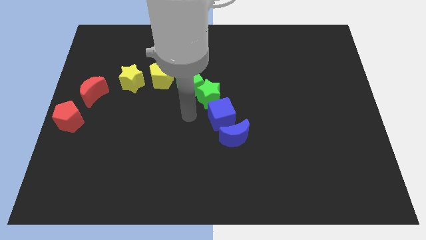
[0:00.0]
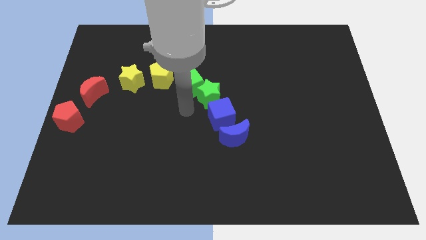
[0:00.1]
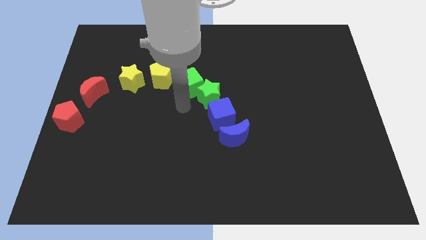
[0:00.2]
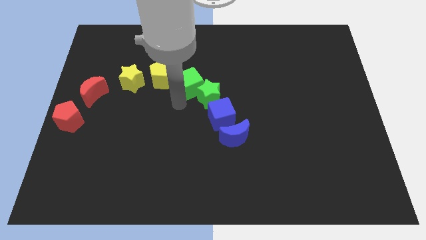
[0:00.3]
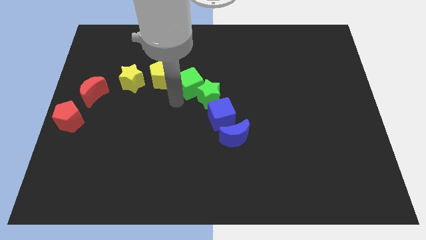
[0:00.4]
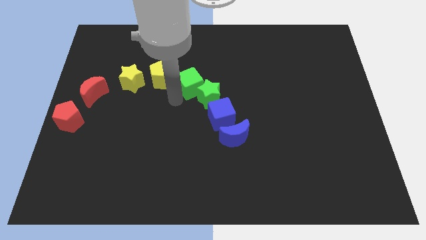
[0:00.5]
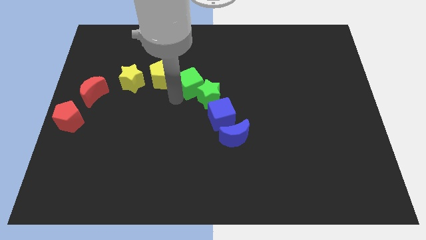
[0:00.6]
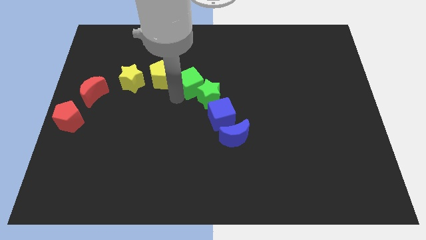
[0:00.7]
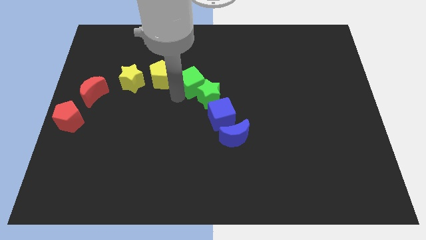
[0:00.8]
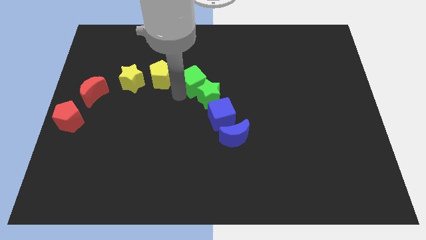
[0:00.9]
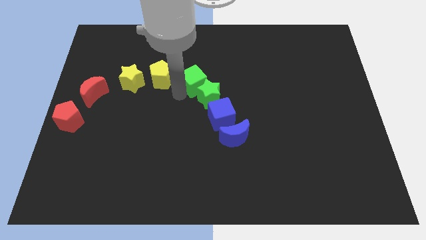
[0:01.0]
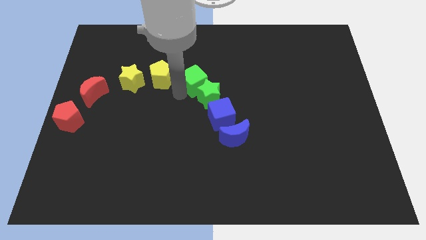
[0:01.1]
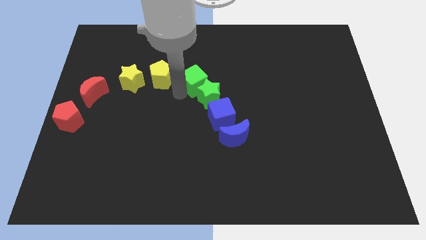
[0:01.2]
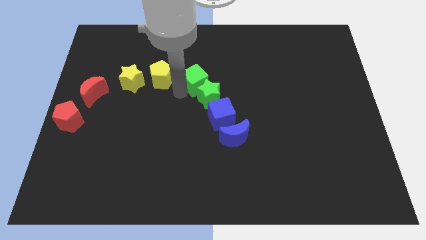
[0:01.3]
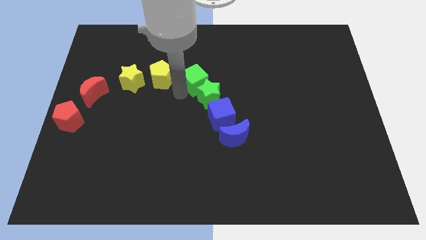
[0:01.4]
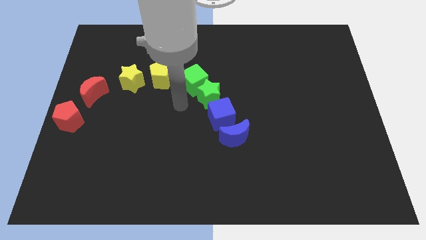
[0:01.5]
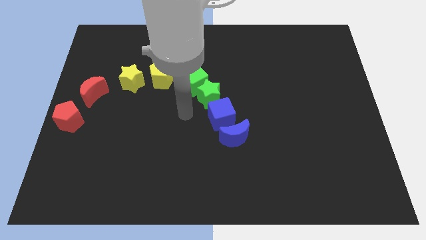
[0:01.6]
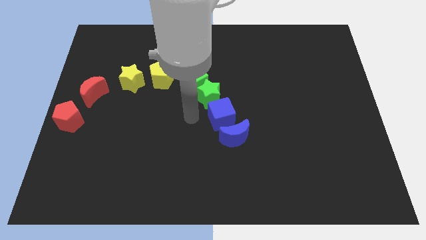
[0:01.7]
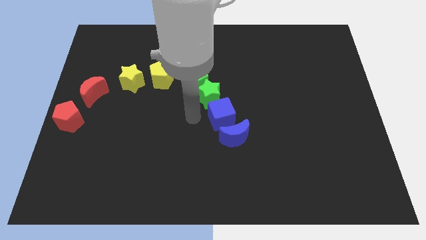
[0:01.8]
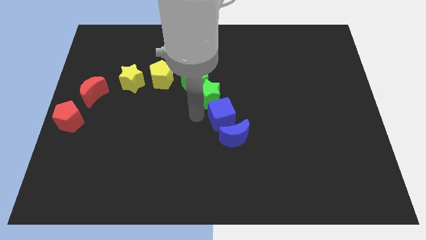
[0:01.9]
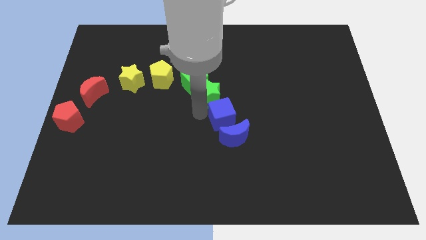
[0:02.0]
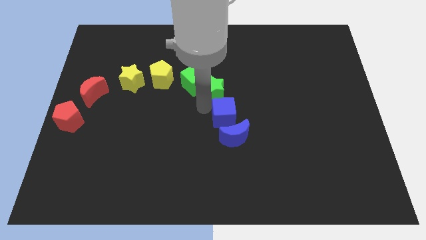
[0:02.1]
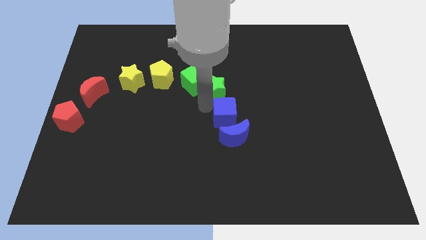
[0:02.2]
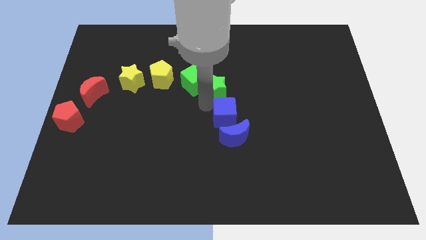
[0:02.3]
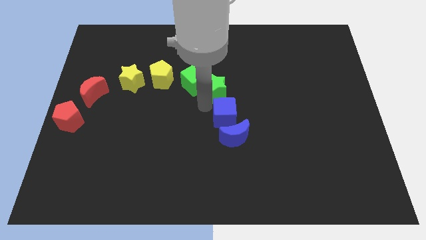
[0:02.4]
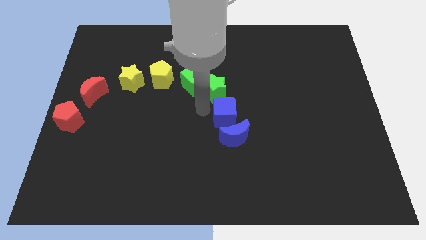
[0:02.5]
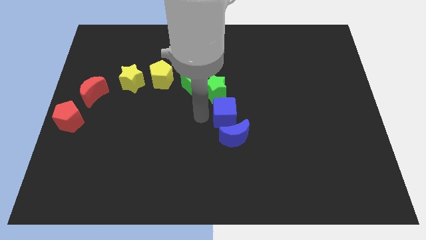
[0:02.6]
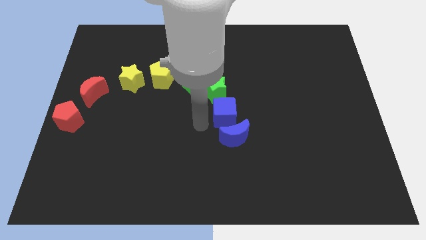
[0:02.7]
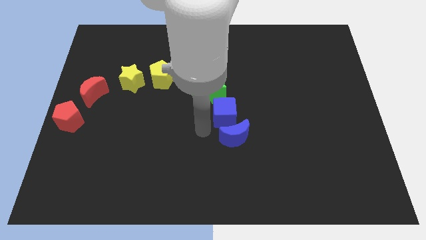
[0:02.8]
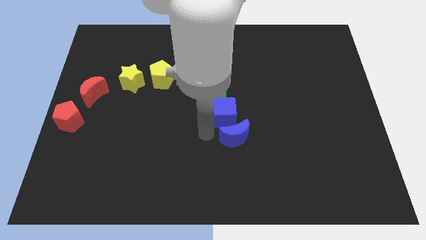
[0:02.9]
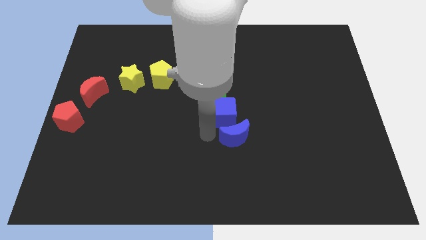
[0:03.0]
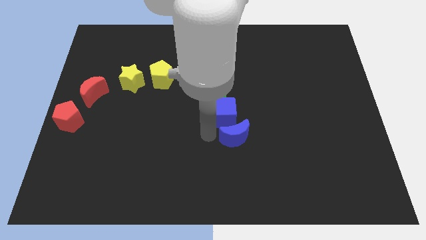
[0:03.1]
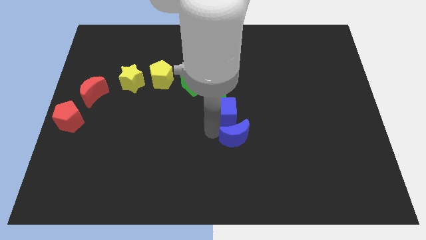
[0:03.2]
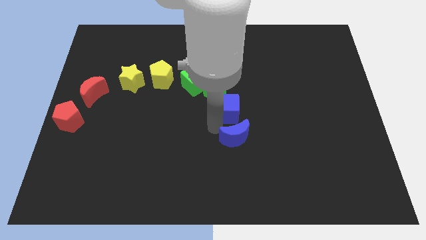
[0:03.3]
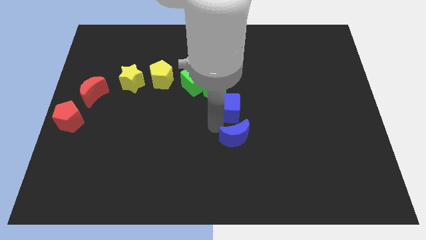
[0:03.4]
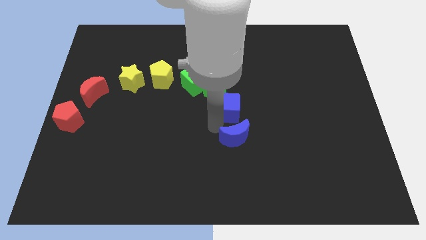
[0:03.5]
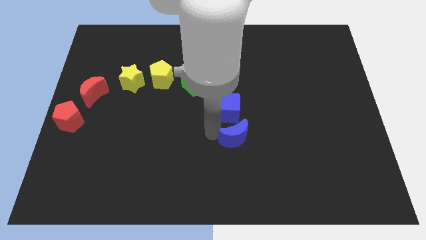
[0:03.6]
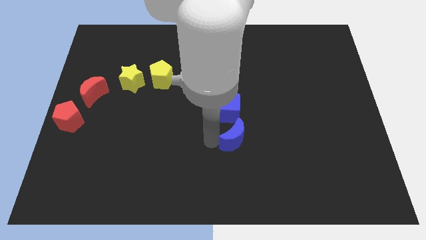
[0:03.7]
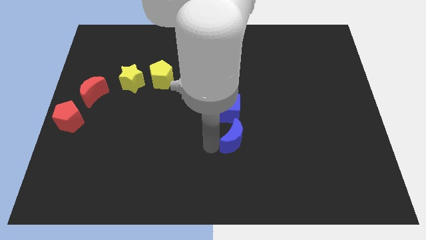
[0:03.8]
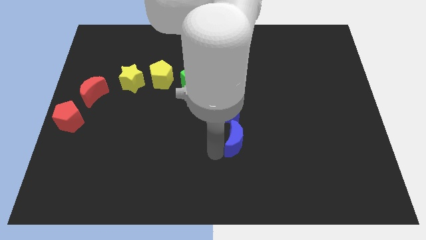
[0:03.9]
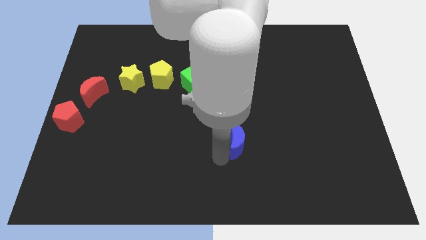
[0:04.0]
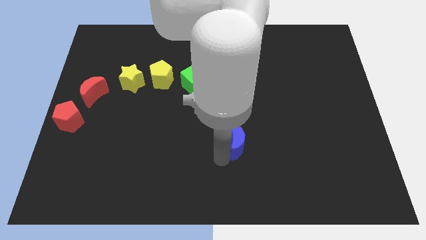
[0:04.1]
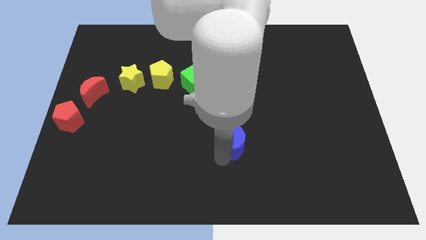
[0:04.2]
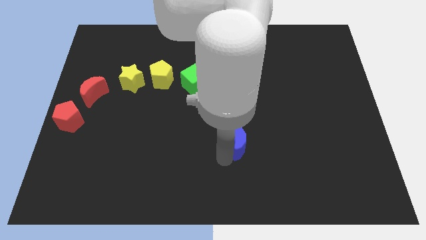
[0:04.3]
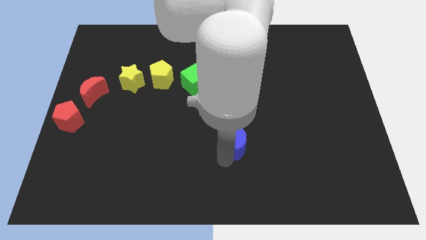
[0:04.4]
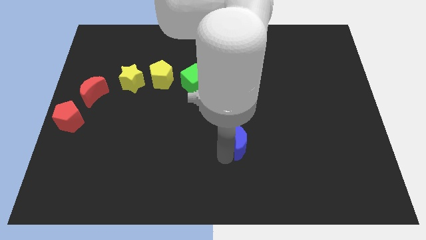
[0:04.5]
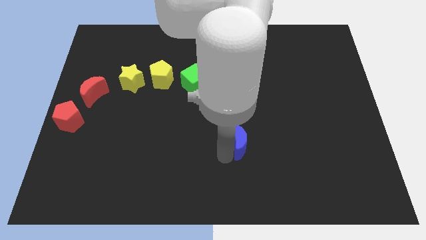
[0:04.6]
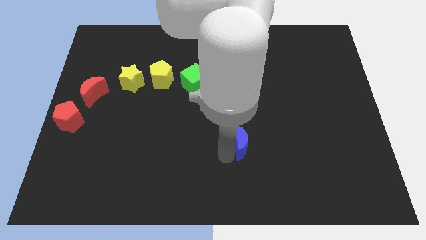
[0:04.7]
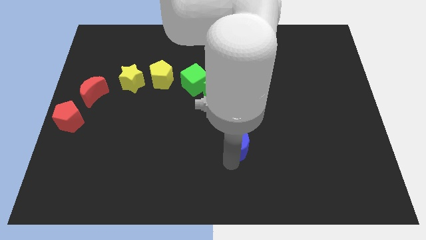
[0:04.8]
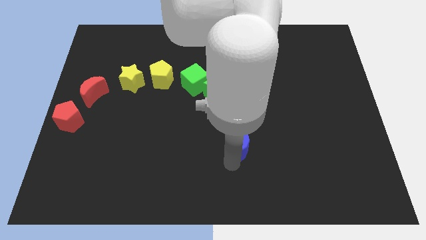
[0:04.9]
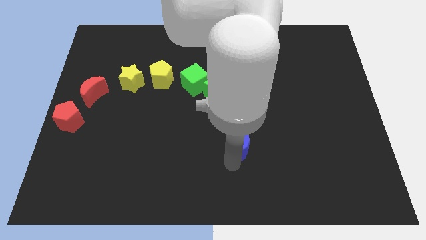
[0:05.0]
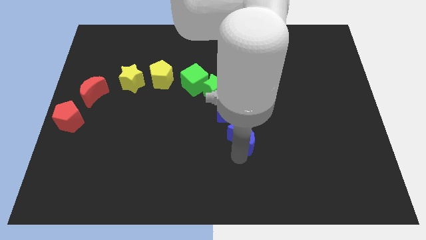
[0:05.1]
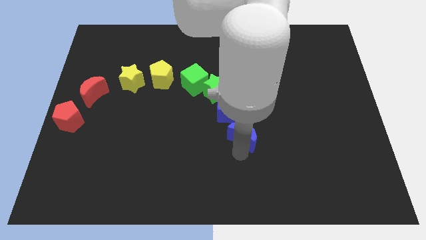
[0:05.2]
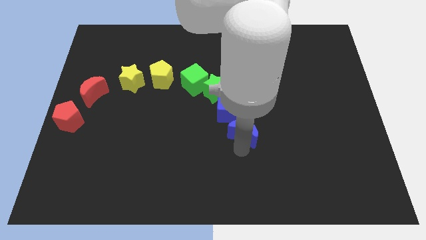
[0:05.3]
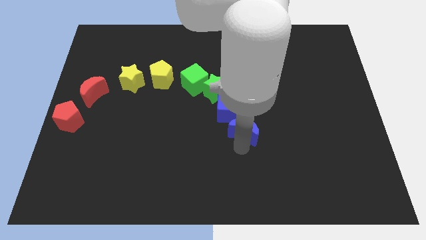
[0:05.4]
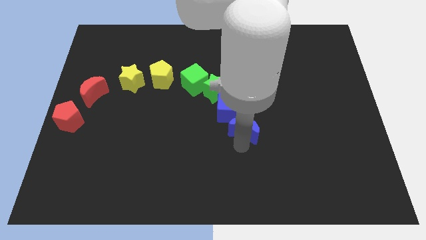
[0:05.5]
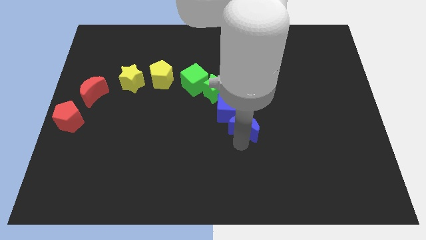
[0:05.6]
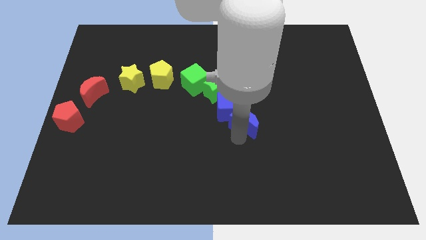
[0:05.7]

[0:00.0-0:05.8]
adjust the green and the blue blocks to form a diagonal line

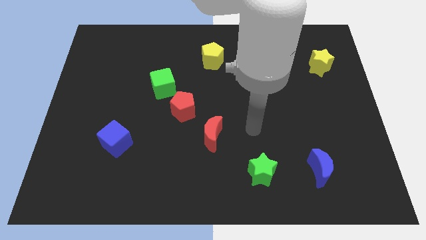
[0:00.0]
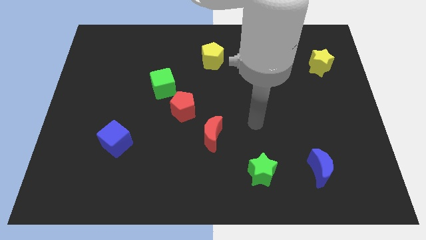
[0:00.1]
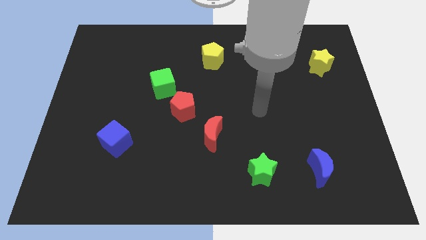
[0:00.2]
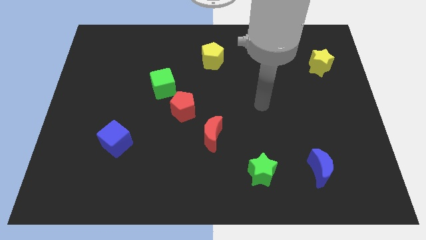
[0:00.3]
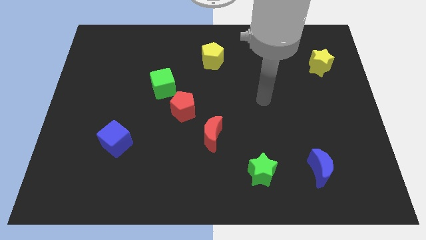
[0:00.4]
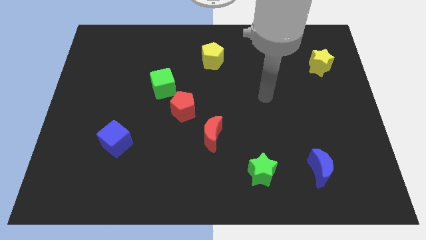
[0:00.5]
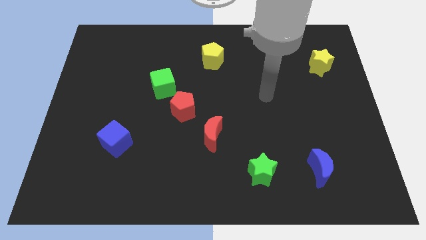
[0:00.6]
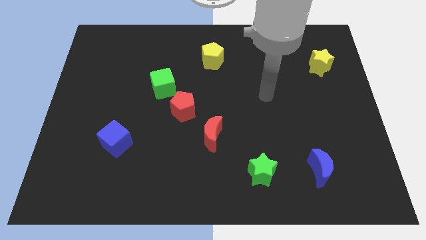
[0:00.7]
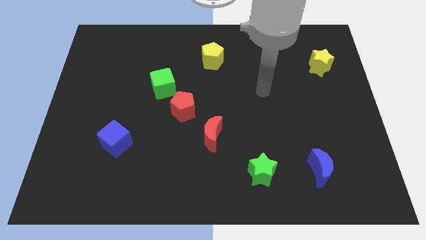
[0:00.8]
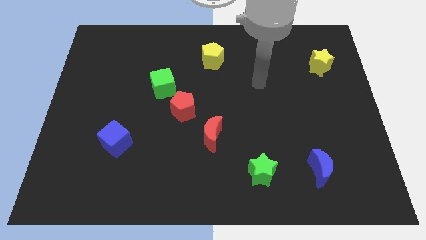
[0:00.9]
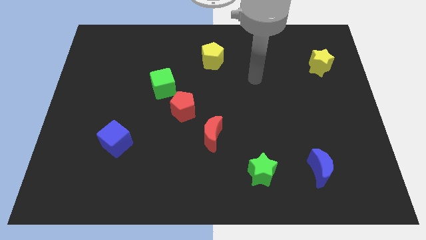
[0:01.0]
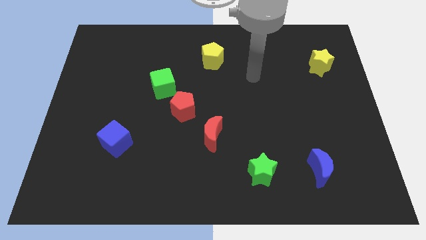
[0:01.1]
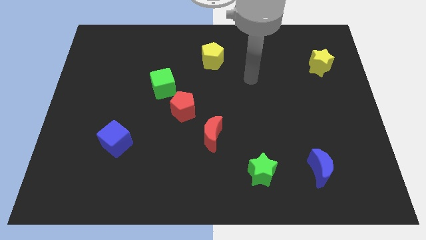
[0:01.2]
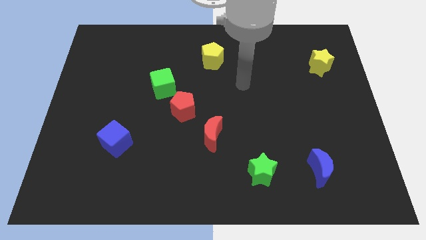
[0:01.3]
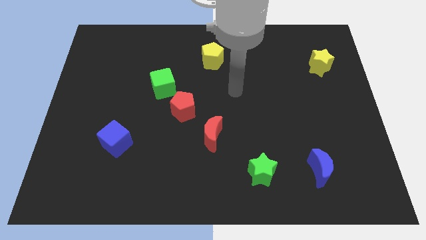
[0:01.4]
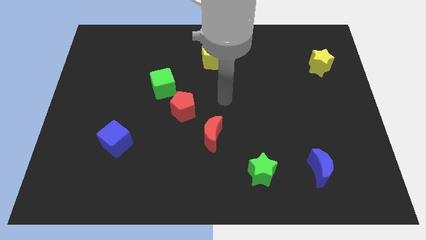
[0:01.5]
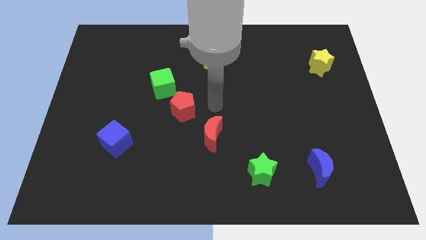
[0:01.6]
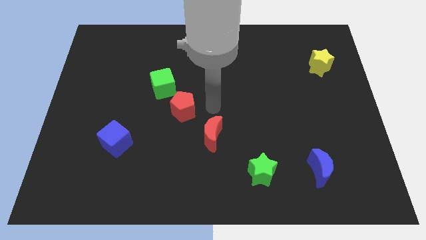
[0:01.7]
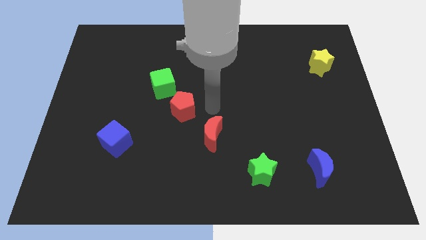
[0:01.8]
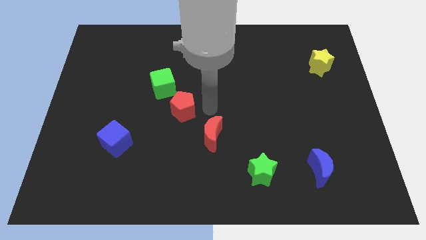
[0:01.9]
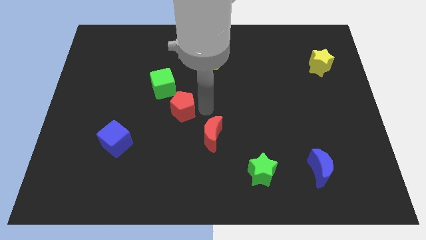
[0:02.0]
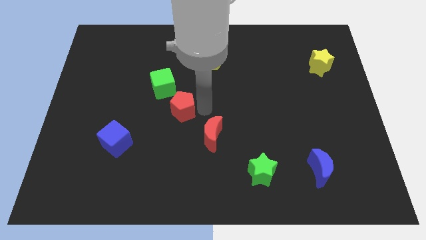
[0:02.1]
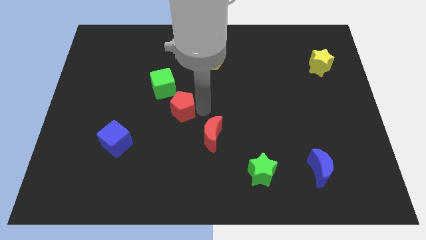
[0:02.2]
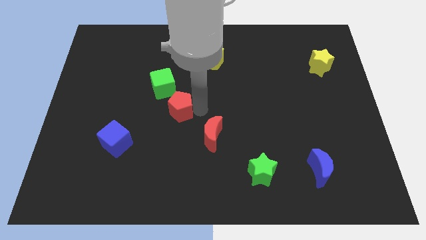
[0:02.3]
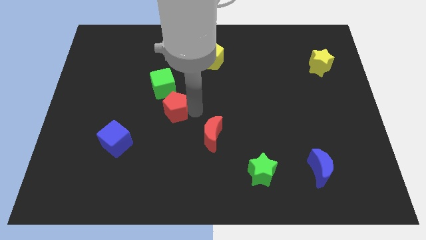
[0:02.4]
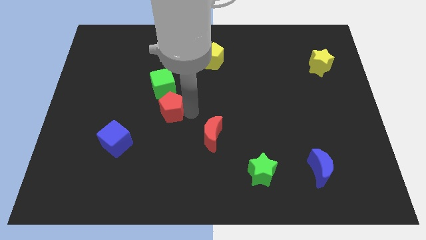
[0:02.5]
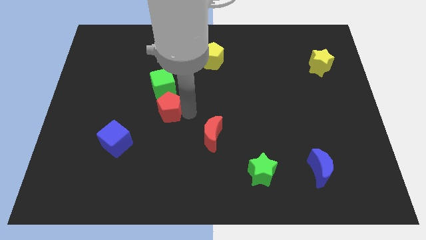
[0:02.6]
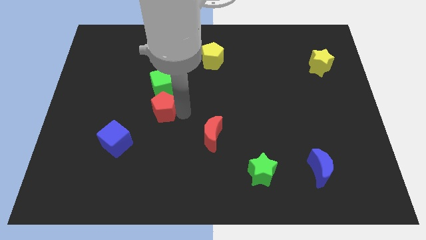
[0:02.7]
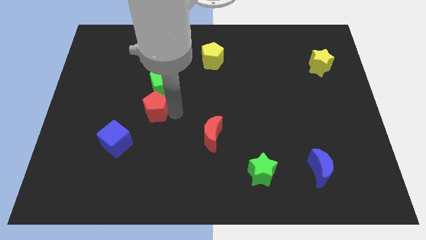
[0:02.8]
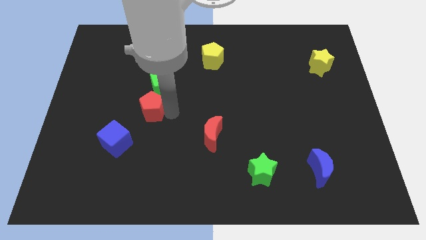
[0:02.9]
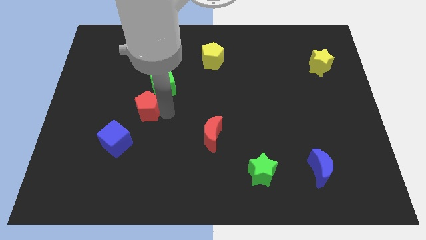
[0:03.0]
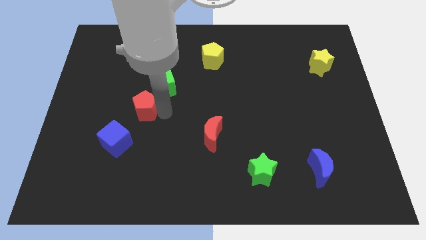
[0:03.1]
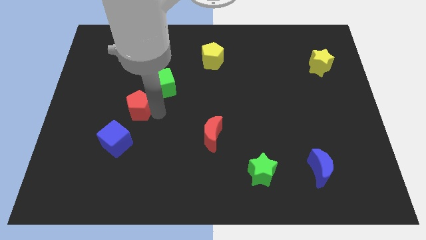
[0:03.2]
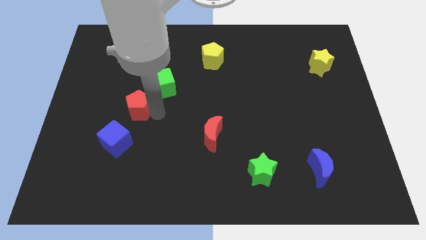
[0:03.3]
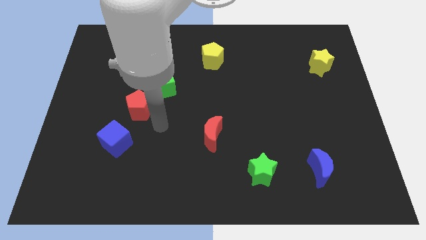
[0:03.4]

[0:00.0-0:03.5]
move the red pentagon to the bottom left of green cube
